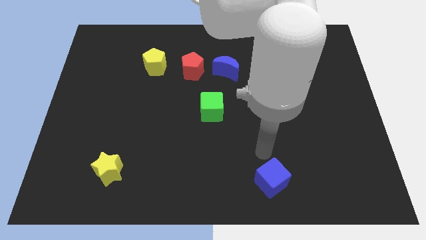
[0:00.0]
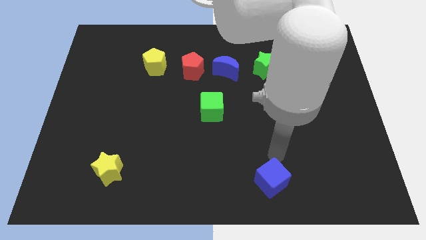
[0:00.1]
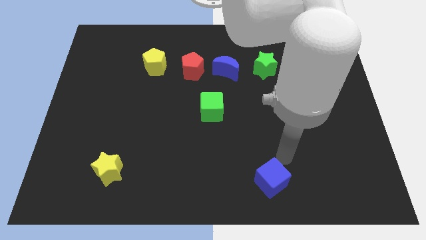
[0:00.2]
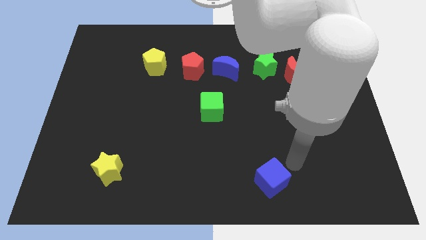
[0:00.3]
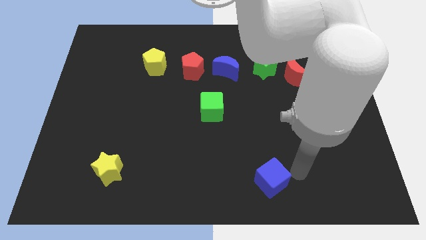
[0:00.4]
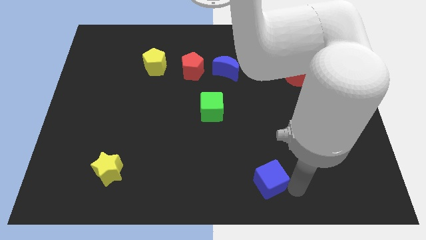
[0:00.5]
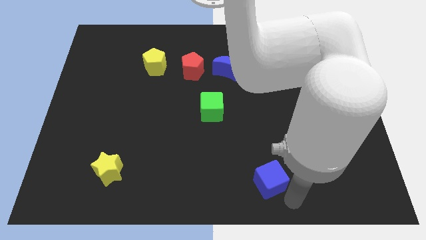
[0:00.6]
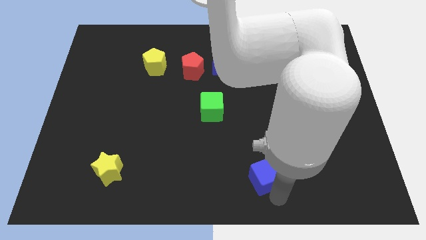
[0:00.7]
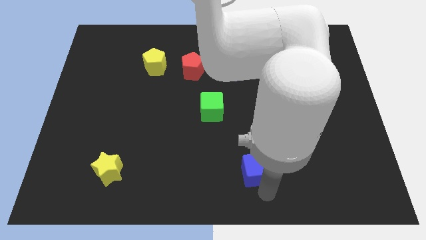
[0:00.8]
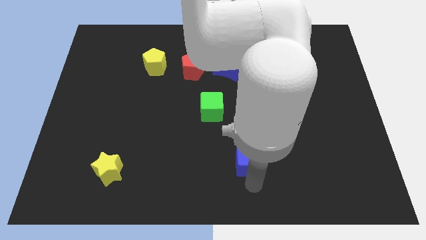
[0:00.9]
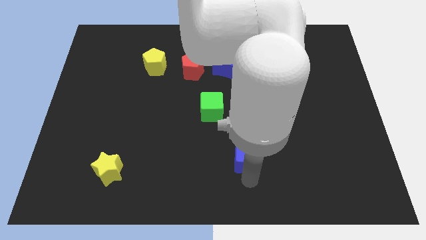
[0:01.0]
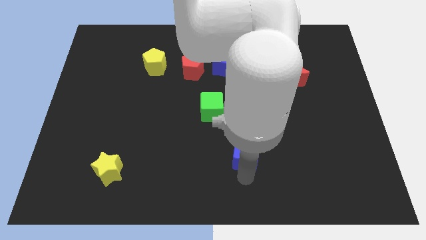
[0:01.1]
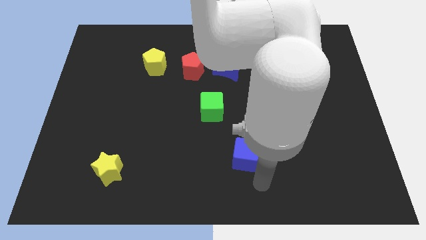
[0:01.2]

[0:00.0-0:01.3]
move the blue cube slightly upwards

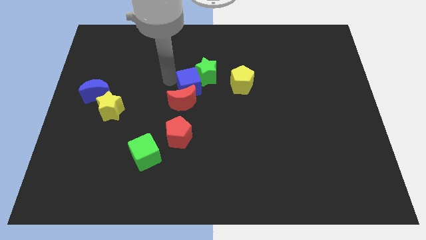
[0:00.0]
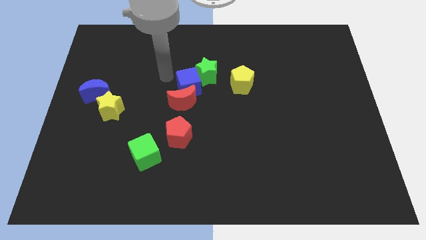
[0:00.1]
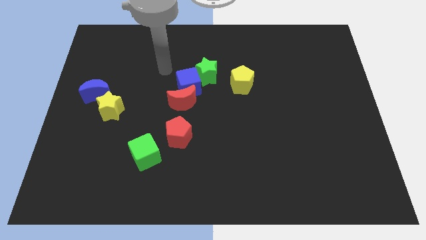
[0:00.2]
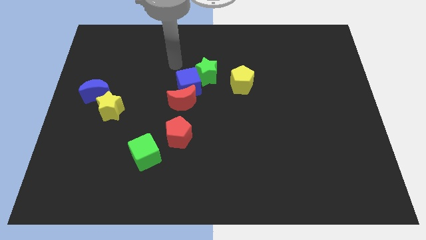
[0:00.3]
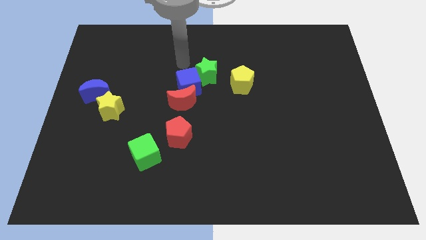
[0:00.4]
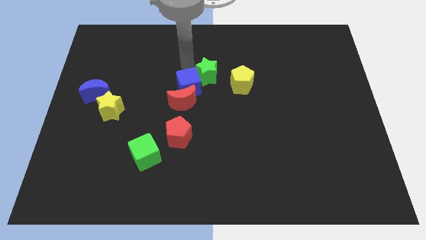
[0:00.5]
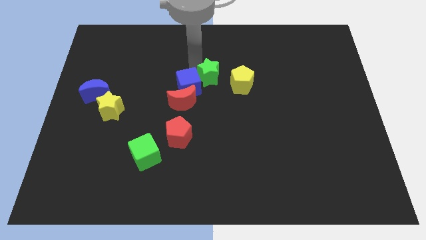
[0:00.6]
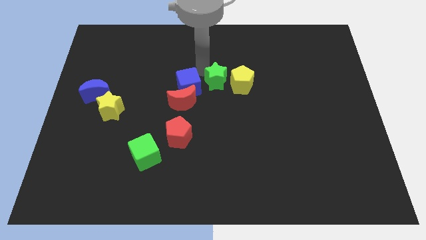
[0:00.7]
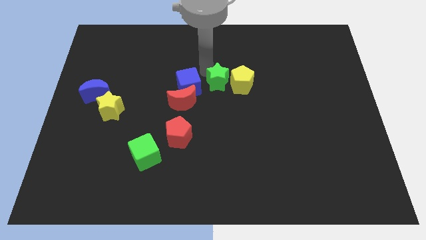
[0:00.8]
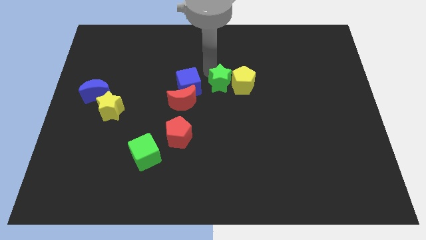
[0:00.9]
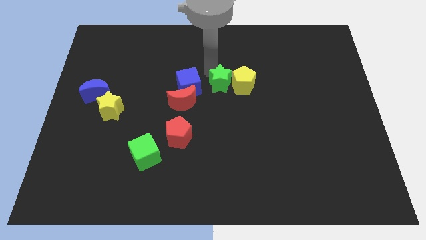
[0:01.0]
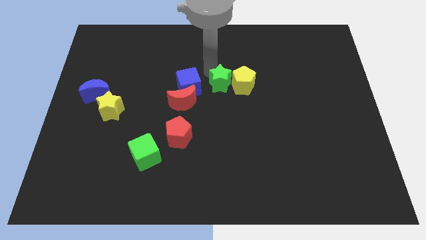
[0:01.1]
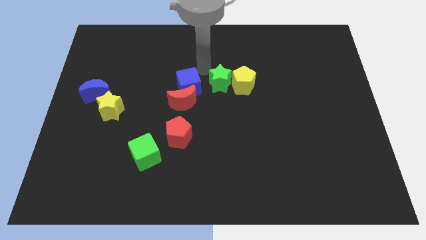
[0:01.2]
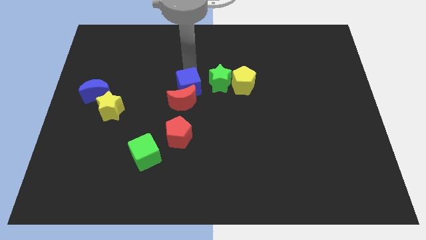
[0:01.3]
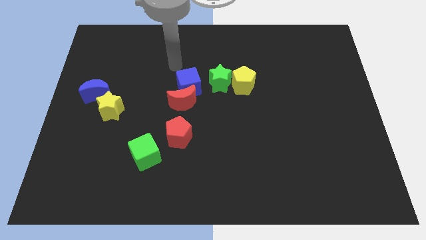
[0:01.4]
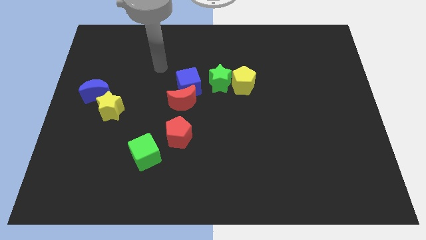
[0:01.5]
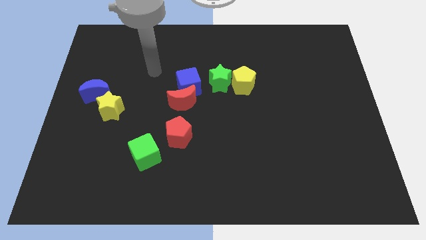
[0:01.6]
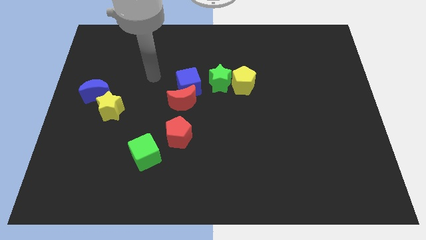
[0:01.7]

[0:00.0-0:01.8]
separate the green star from the blue cube

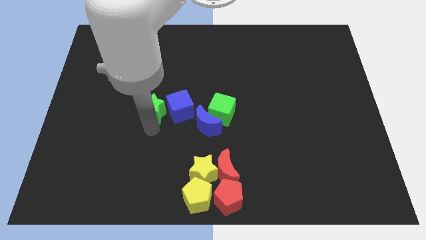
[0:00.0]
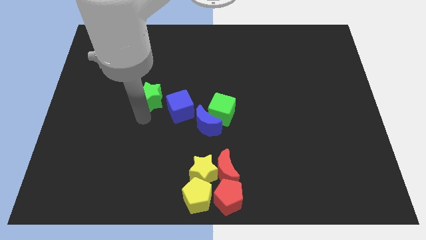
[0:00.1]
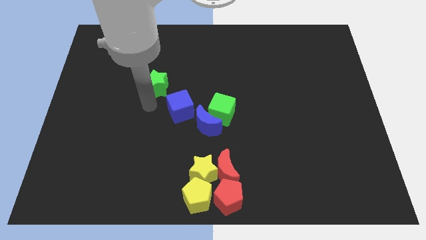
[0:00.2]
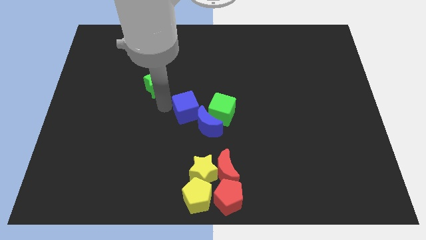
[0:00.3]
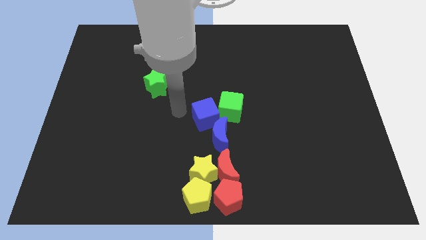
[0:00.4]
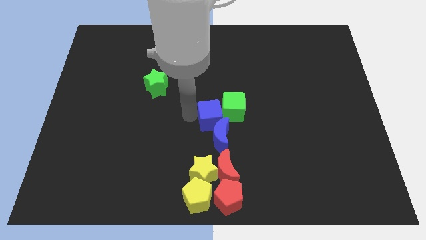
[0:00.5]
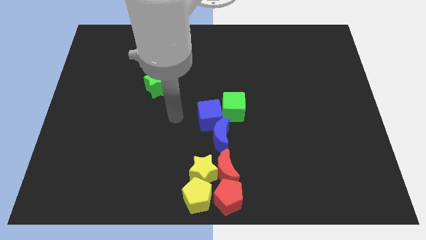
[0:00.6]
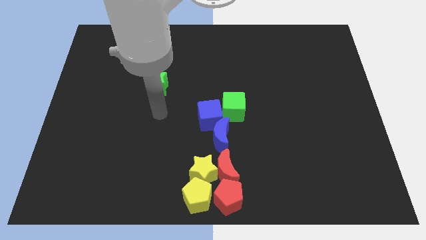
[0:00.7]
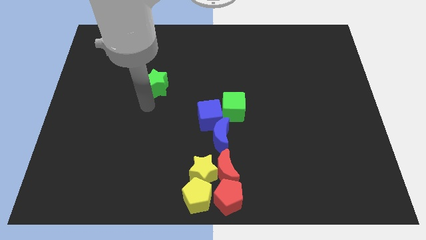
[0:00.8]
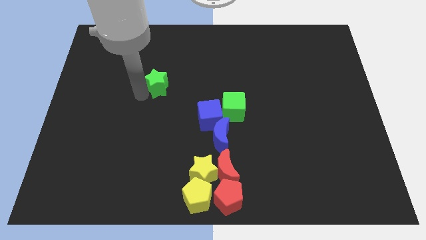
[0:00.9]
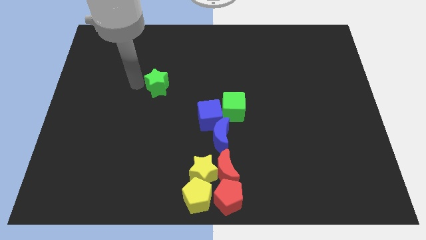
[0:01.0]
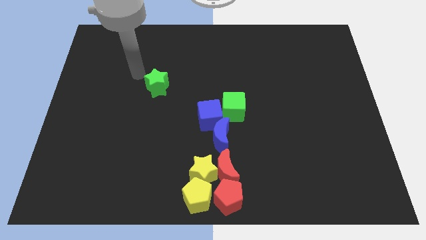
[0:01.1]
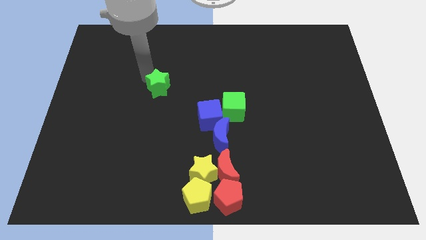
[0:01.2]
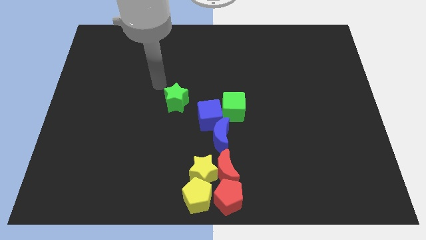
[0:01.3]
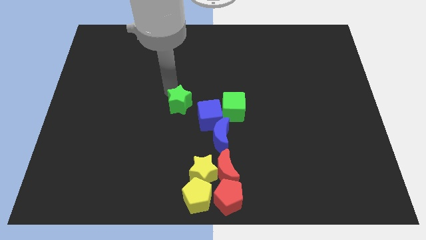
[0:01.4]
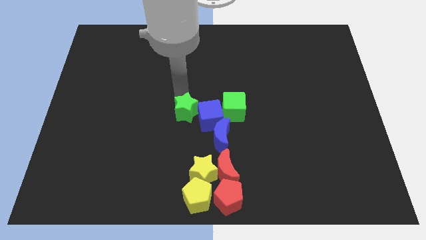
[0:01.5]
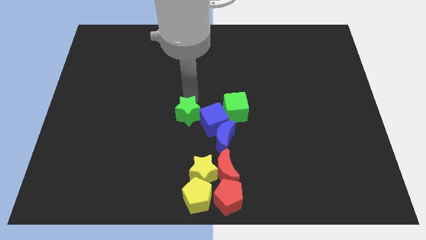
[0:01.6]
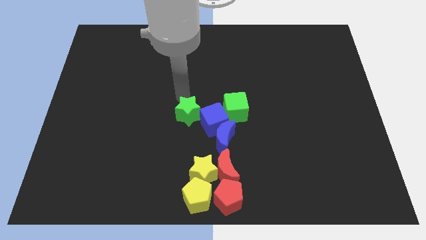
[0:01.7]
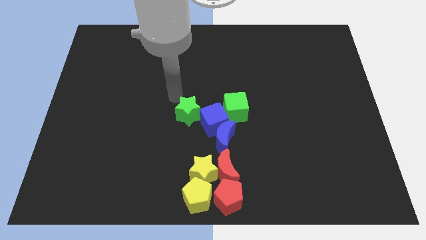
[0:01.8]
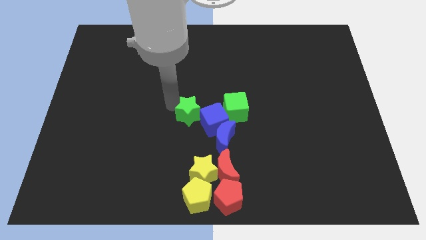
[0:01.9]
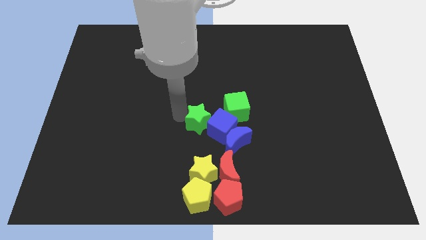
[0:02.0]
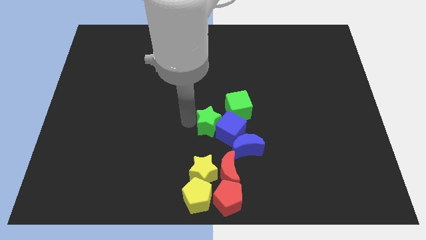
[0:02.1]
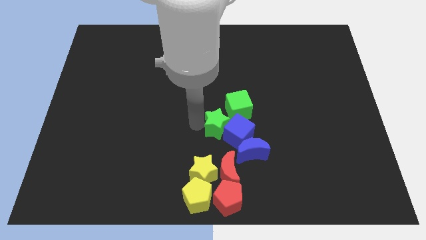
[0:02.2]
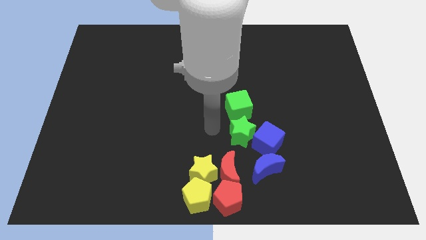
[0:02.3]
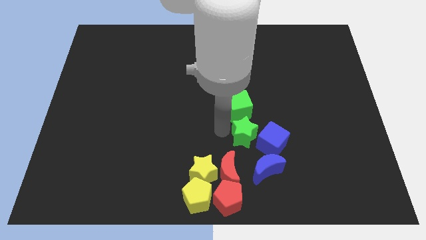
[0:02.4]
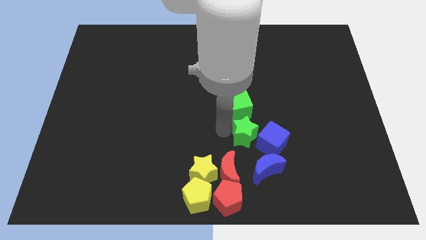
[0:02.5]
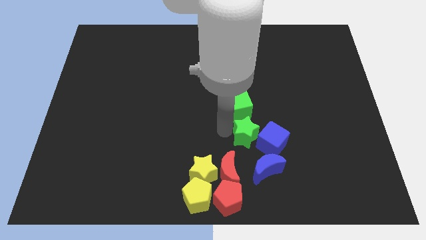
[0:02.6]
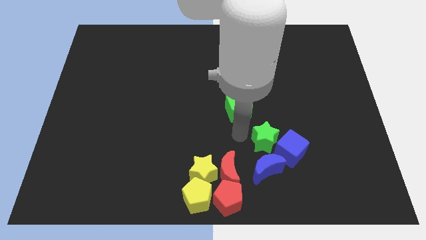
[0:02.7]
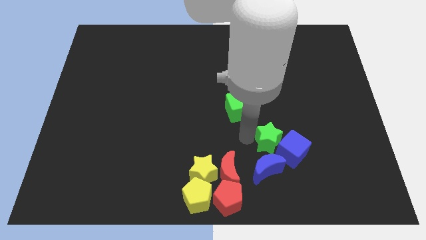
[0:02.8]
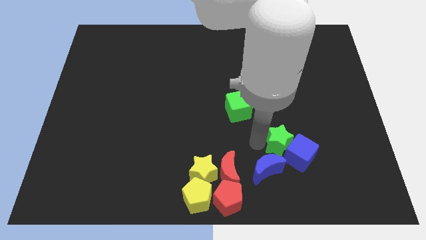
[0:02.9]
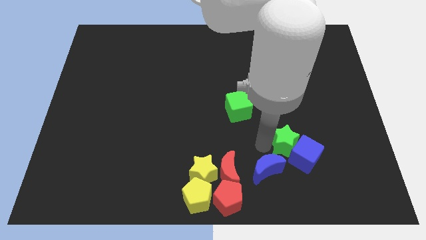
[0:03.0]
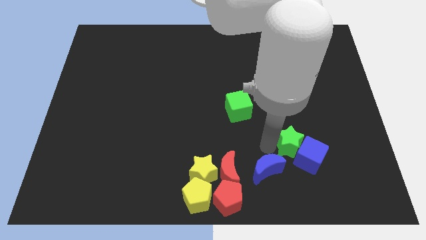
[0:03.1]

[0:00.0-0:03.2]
push green star along with blue cube to the right

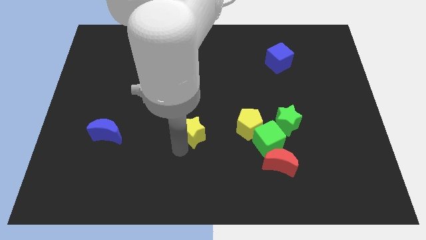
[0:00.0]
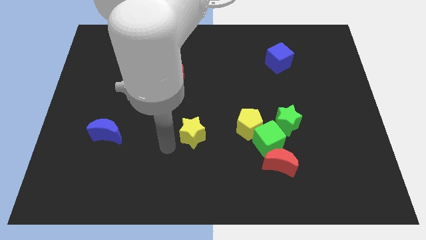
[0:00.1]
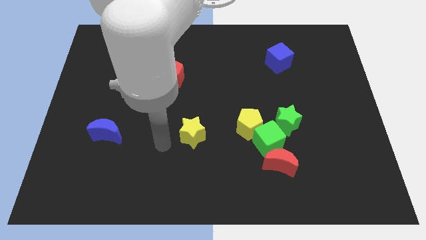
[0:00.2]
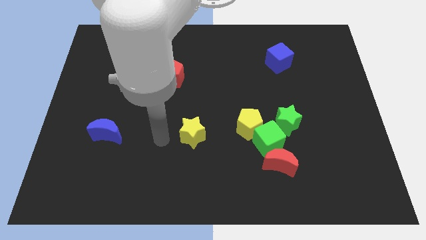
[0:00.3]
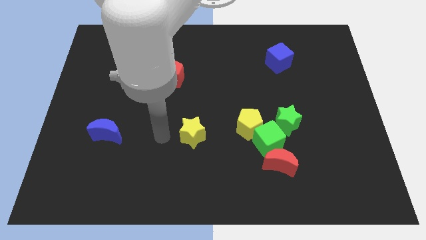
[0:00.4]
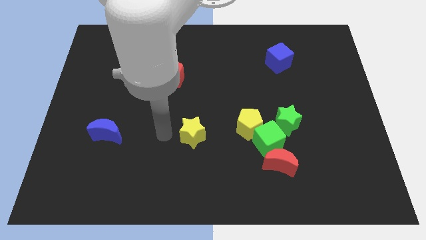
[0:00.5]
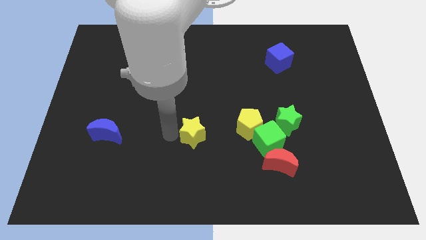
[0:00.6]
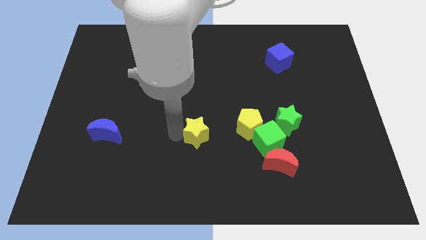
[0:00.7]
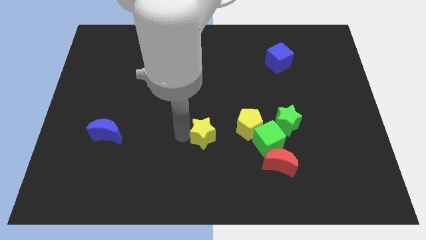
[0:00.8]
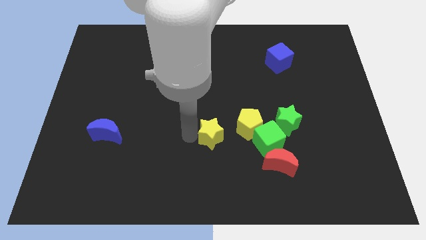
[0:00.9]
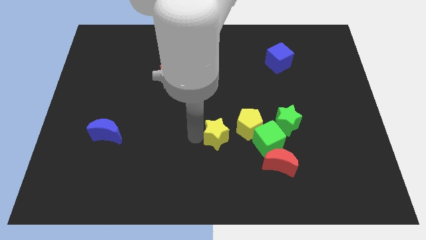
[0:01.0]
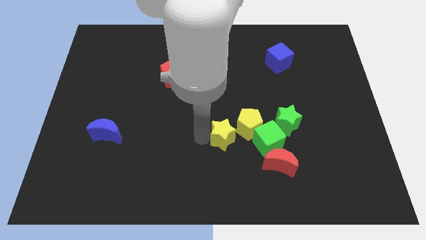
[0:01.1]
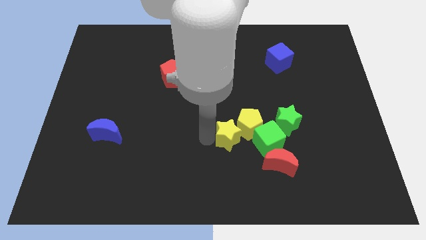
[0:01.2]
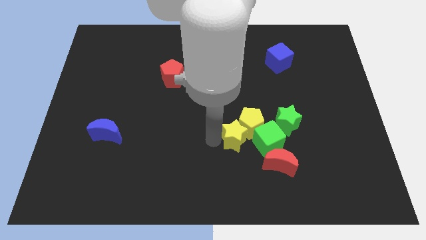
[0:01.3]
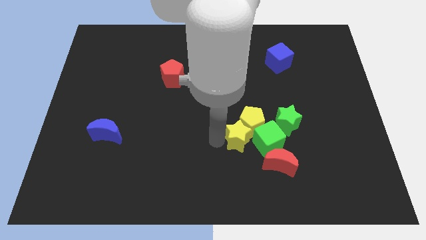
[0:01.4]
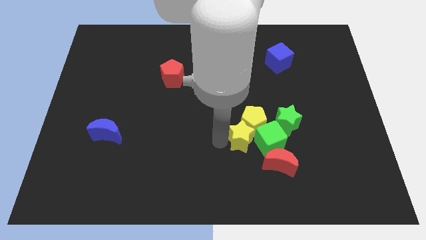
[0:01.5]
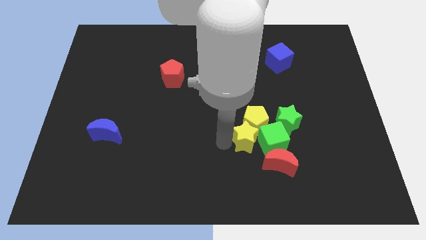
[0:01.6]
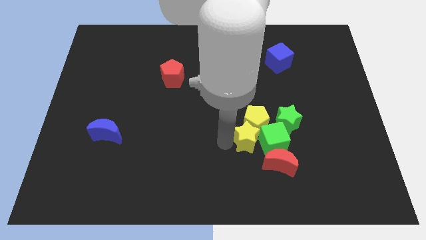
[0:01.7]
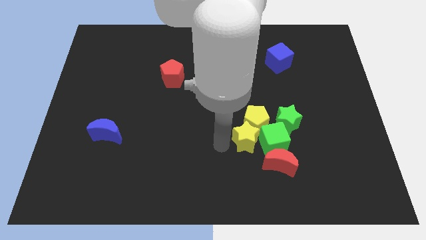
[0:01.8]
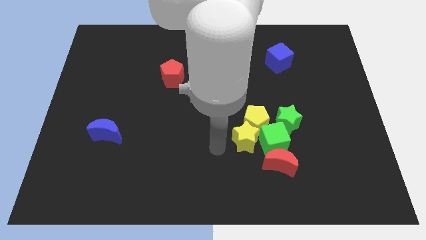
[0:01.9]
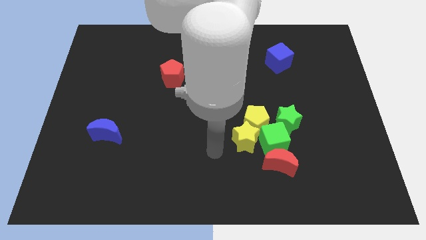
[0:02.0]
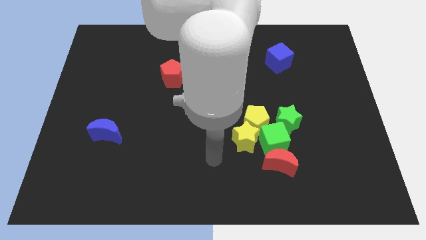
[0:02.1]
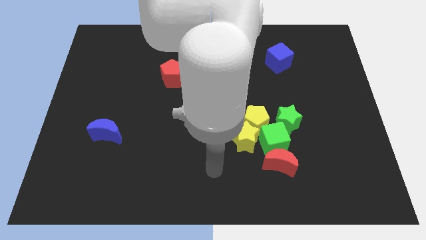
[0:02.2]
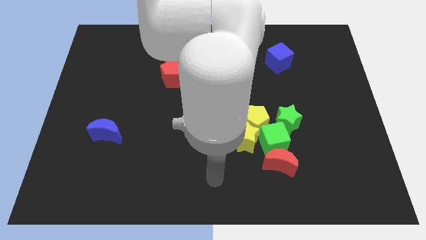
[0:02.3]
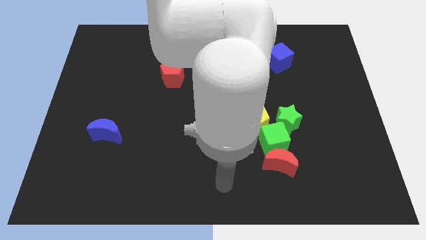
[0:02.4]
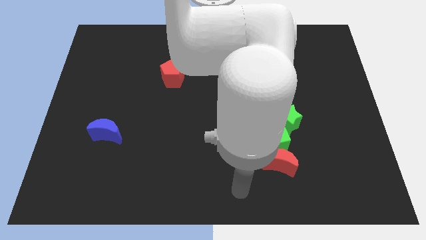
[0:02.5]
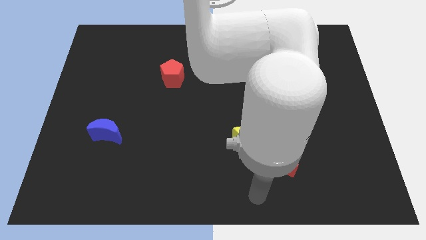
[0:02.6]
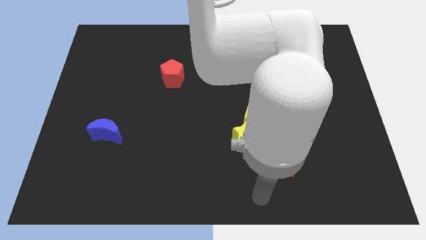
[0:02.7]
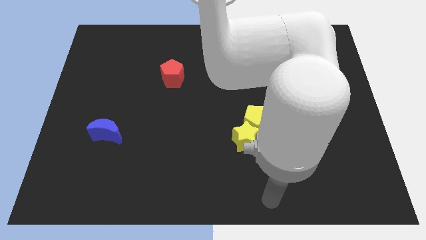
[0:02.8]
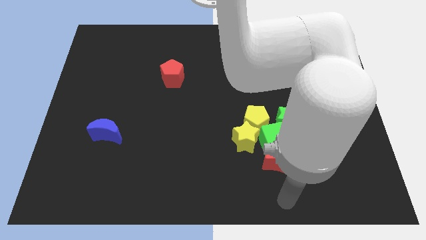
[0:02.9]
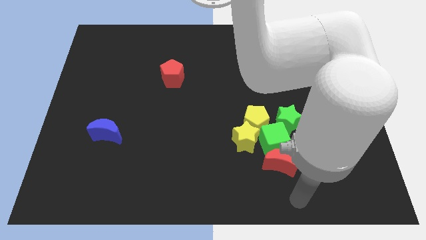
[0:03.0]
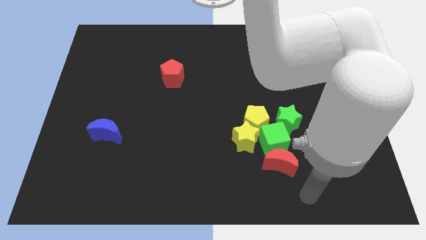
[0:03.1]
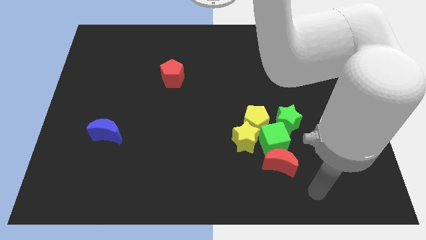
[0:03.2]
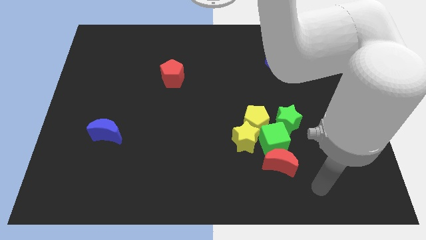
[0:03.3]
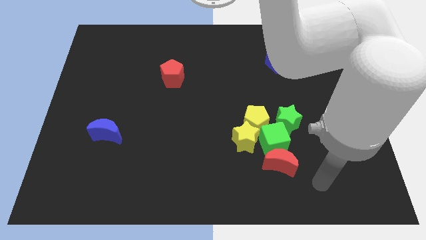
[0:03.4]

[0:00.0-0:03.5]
push the yellow star left to the green cube
